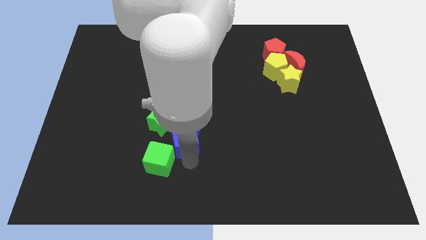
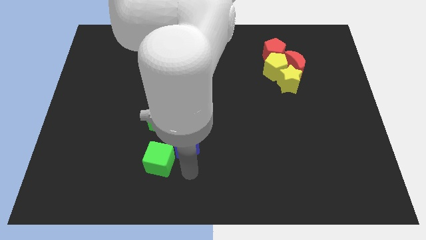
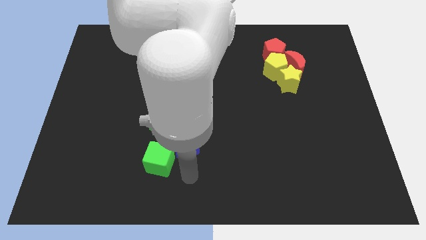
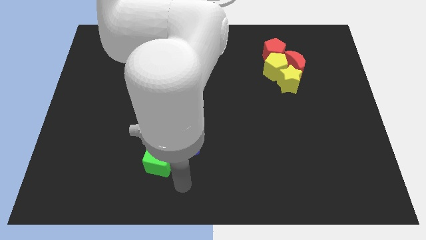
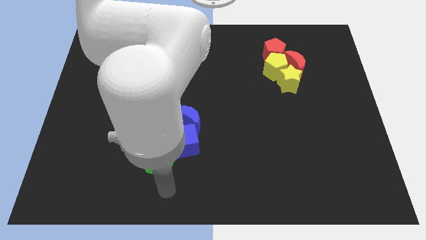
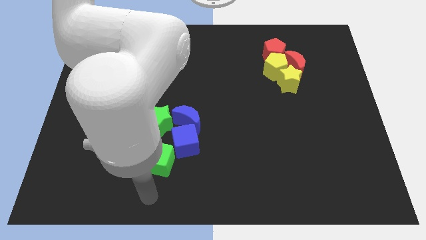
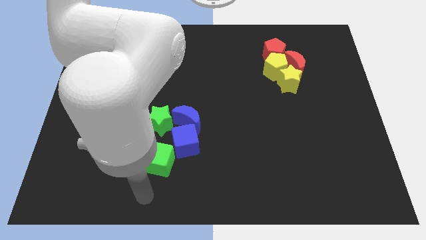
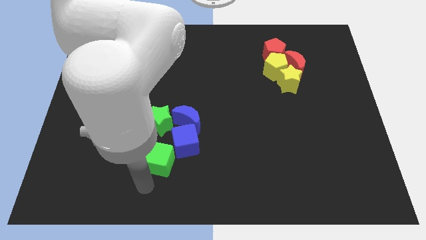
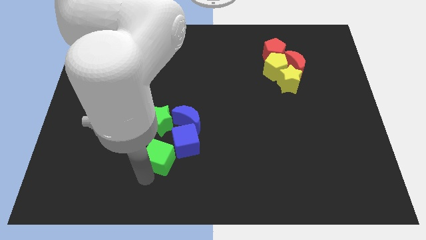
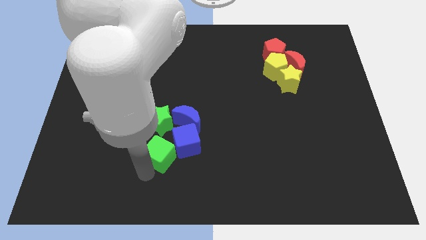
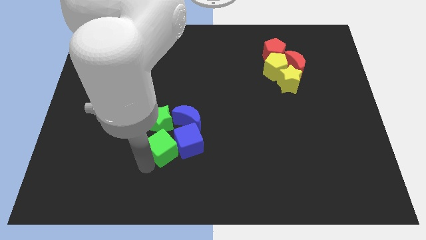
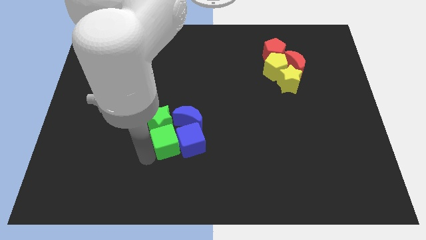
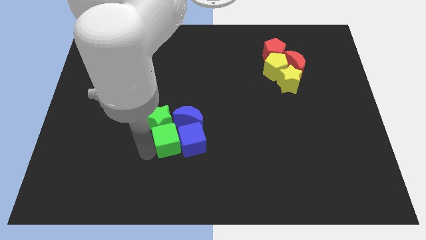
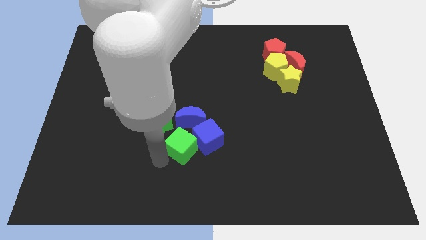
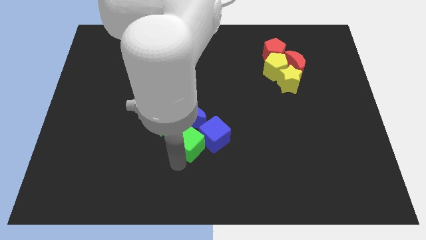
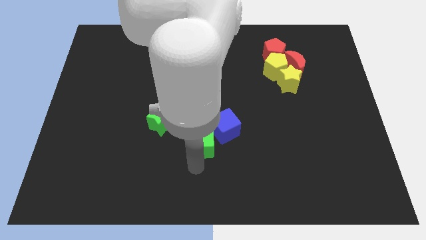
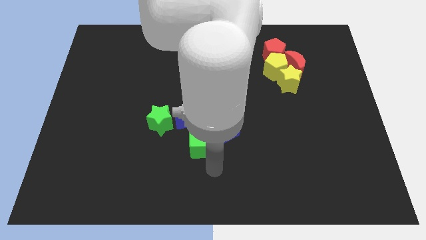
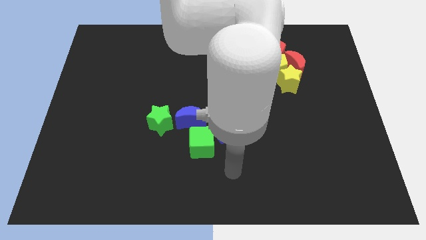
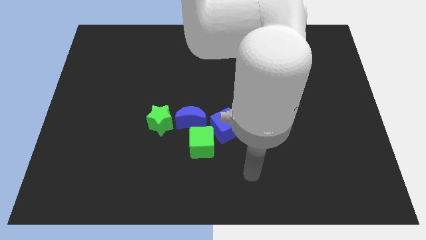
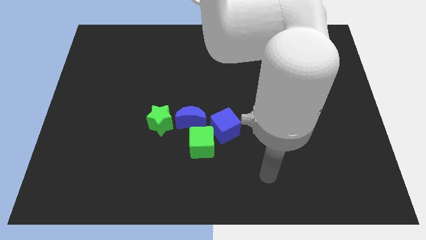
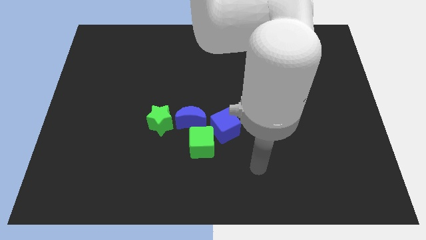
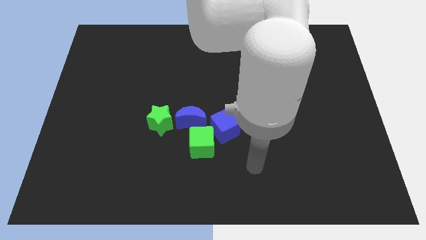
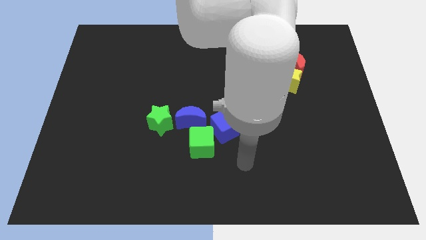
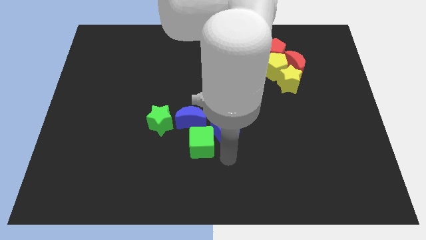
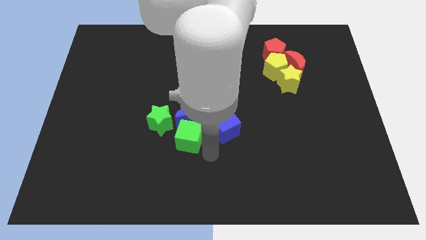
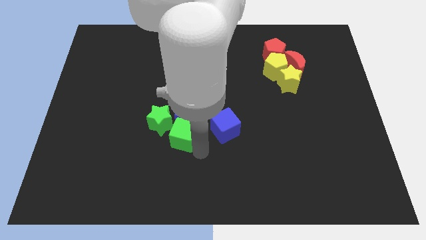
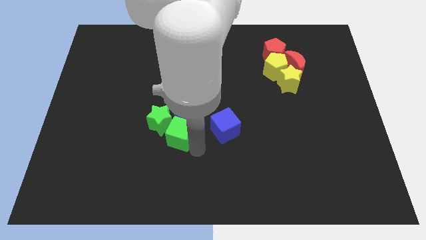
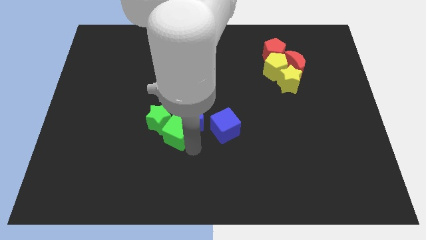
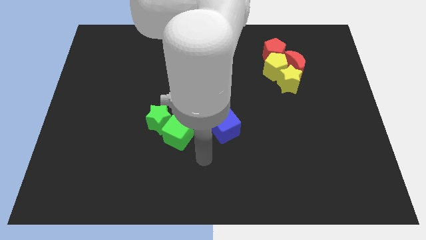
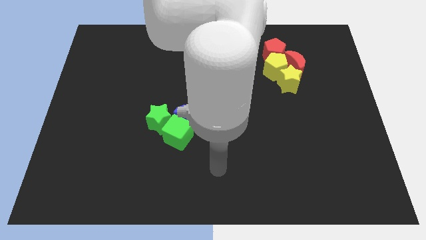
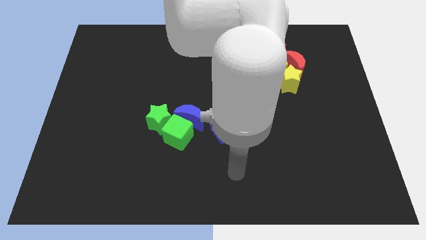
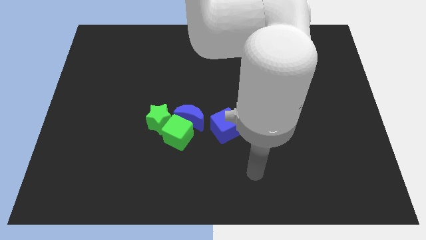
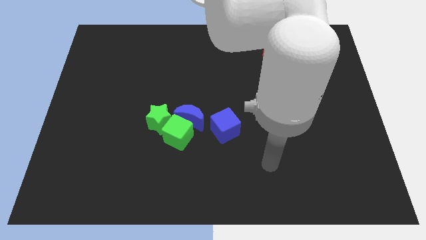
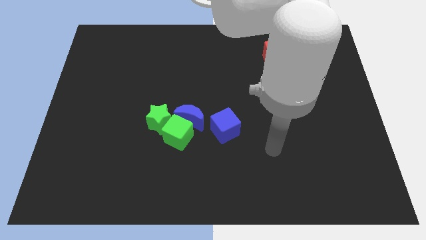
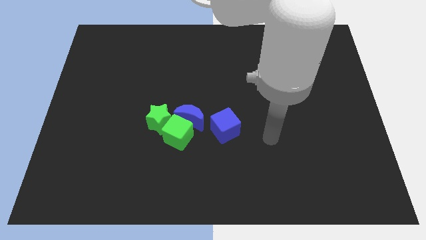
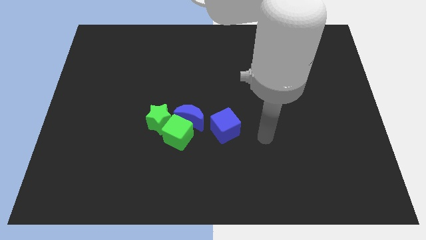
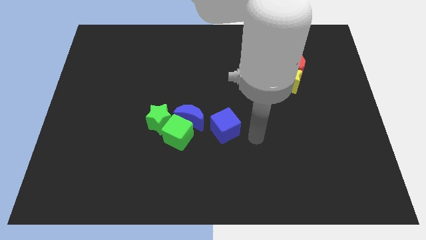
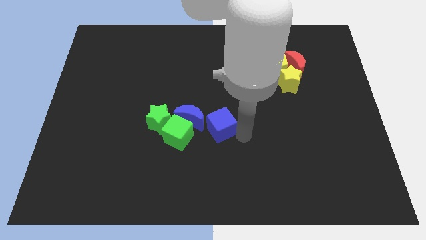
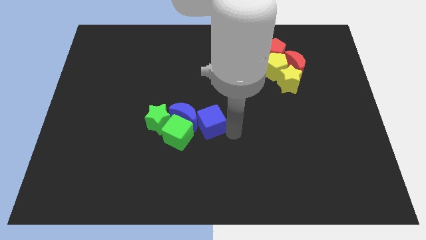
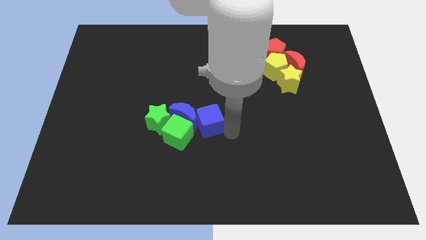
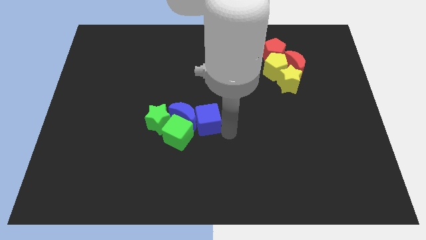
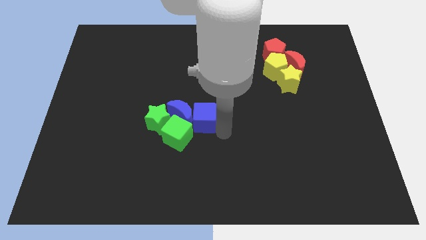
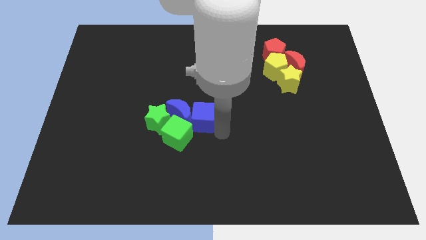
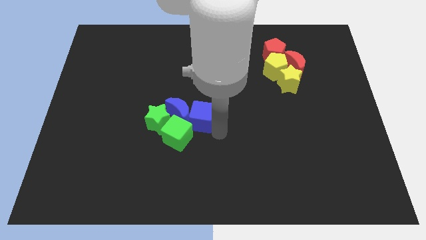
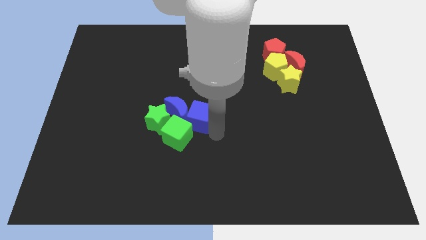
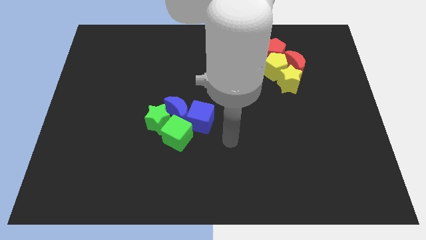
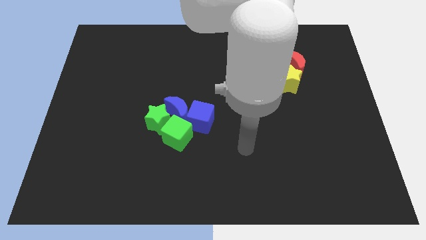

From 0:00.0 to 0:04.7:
move the group of blocks to the center of the board

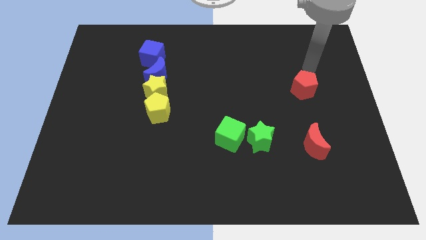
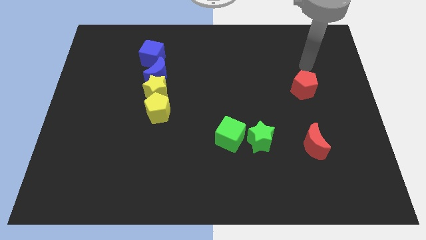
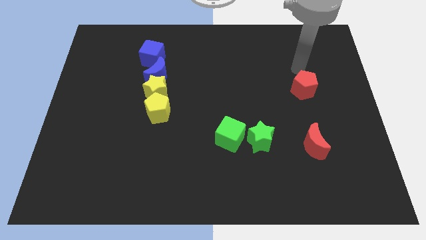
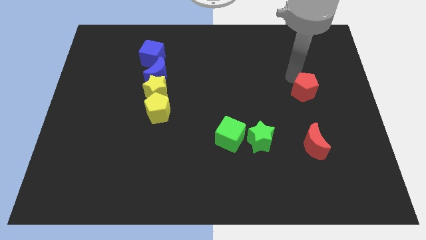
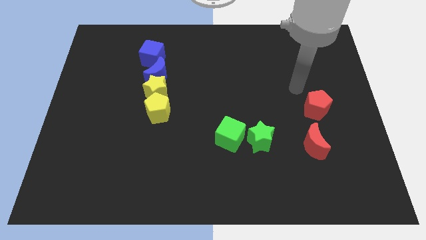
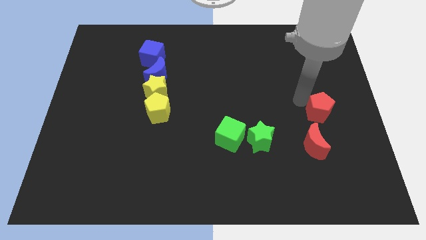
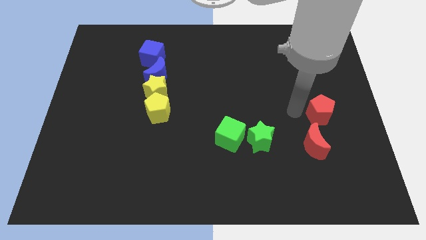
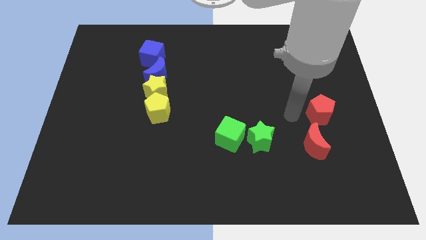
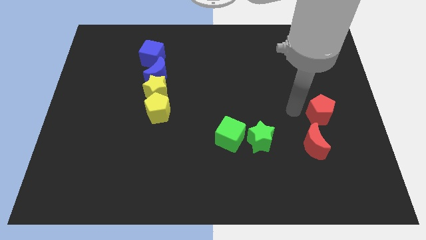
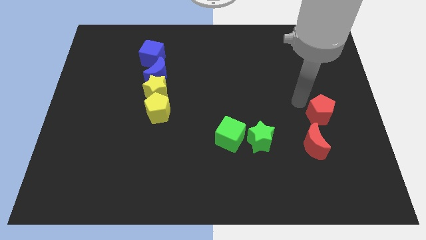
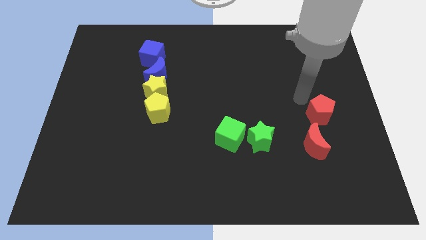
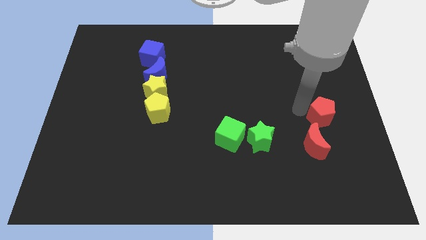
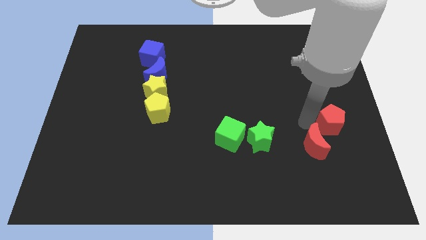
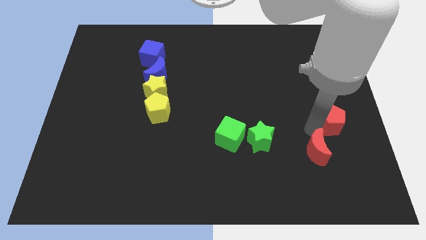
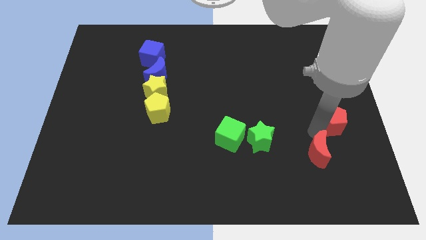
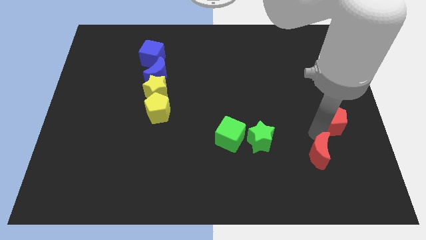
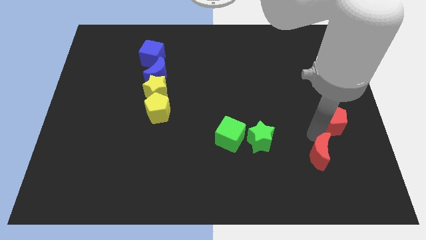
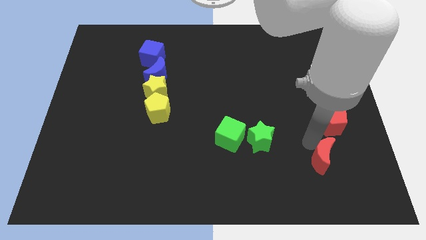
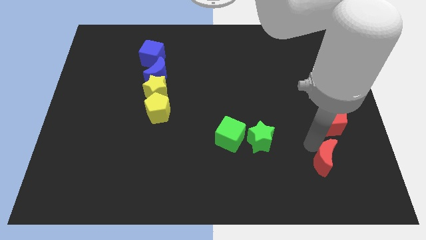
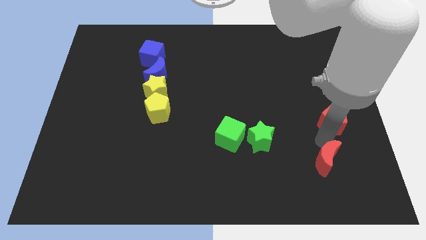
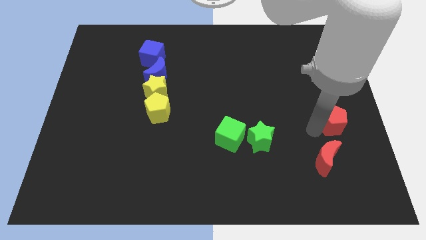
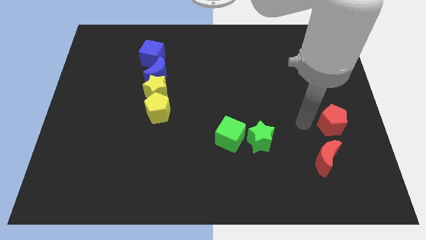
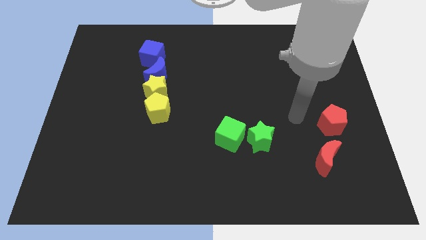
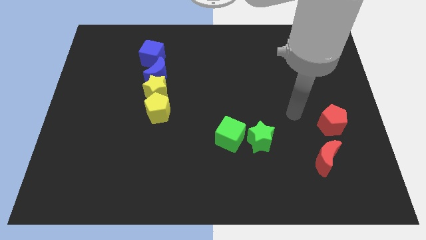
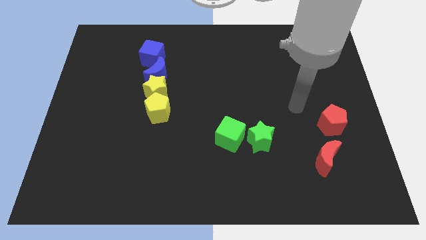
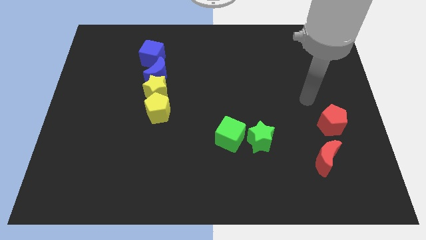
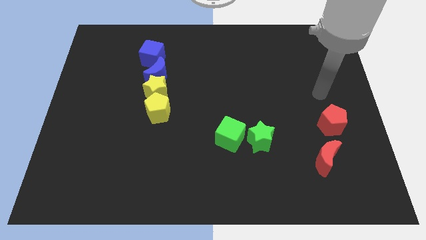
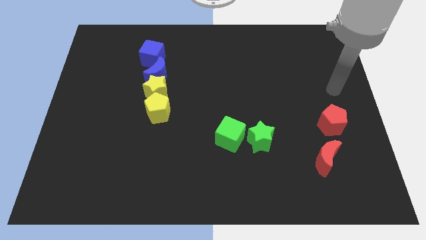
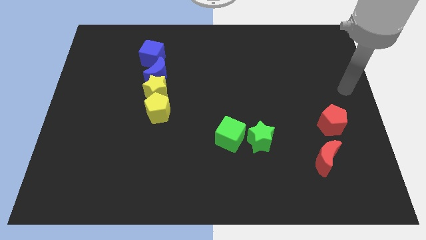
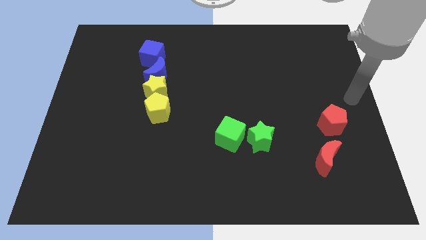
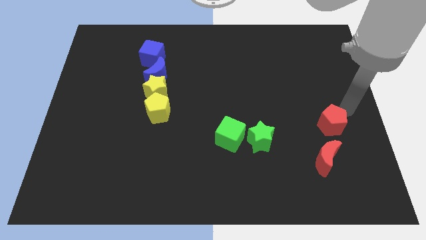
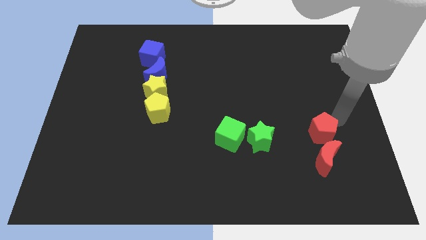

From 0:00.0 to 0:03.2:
place the red crescent vertically below the red pentagon

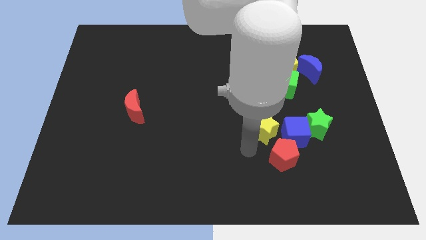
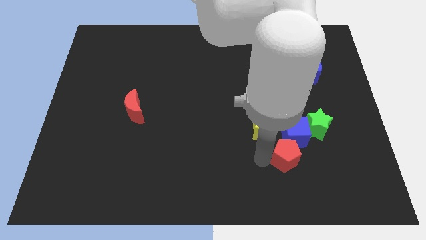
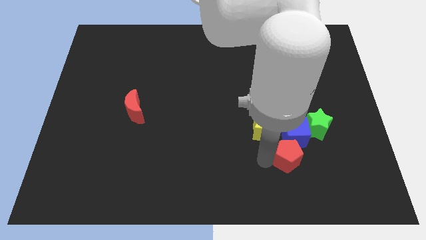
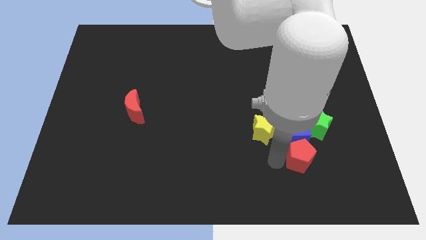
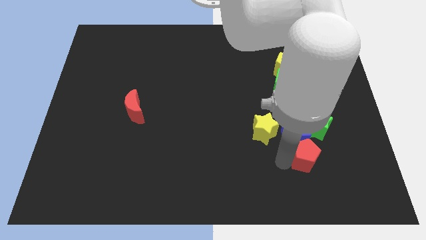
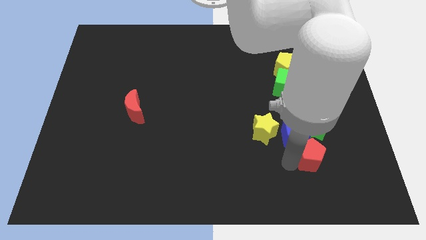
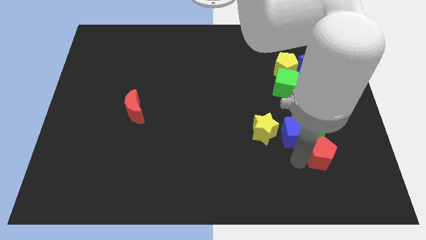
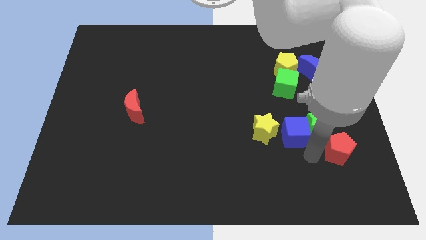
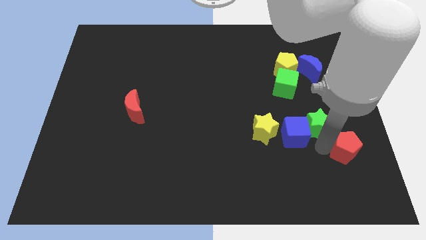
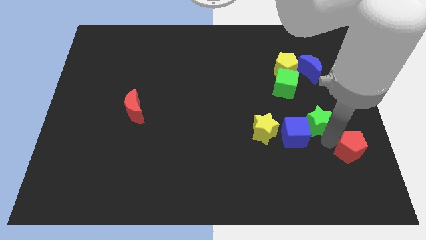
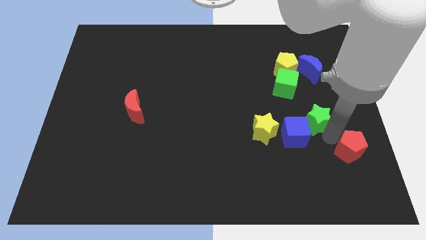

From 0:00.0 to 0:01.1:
push the red pentagon towards the center right
